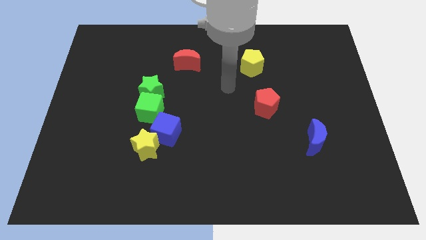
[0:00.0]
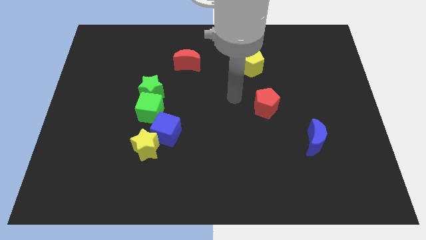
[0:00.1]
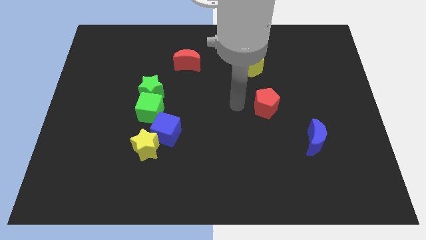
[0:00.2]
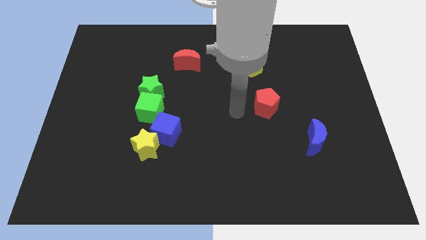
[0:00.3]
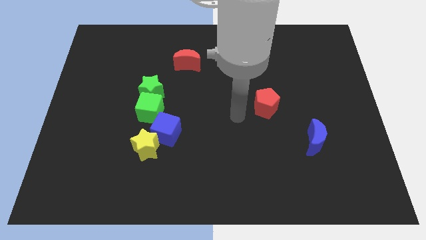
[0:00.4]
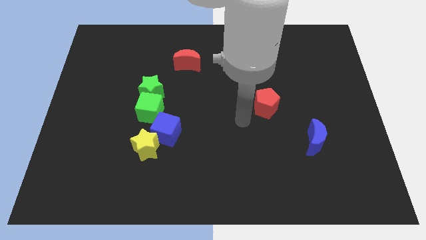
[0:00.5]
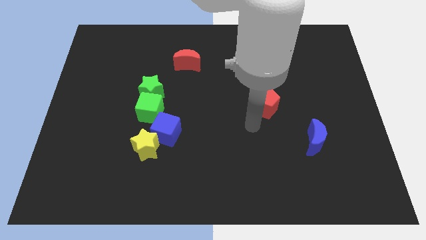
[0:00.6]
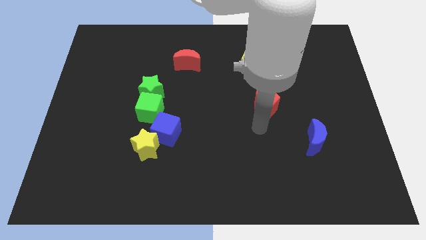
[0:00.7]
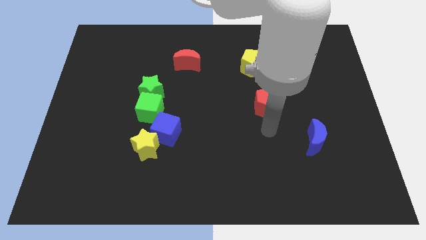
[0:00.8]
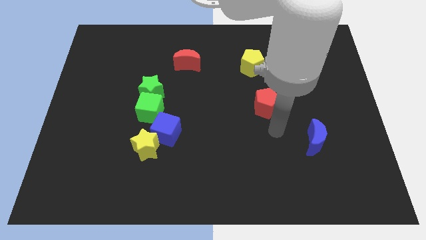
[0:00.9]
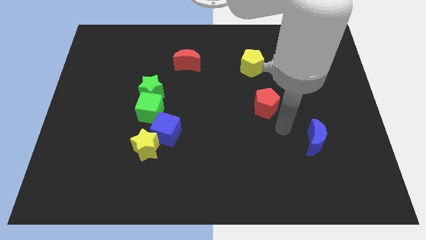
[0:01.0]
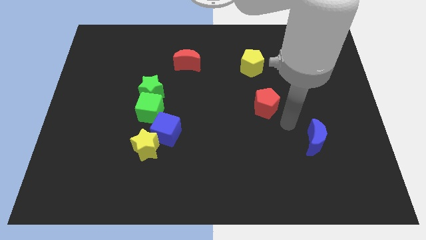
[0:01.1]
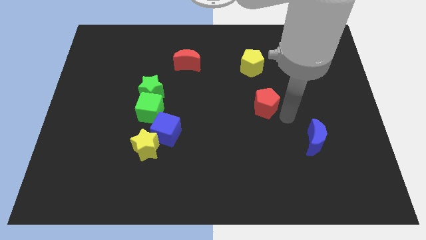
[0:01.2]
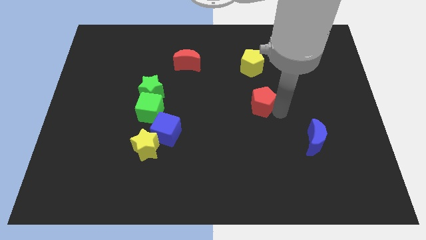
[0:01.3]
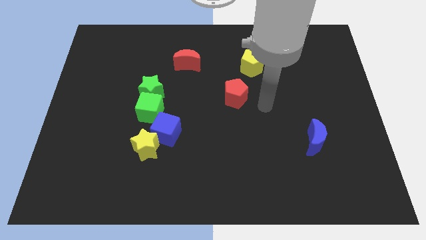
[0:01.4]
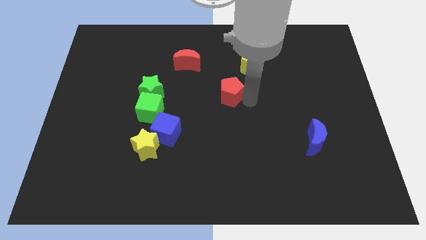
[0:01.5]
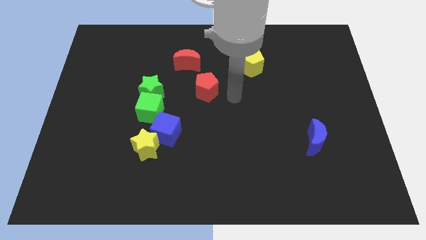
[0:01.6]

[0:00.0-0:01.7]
put the red pentagon right to the green star

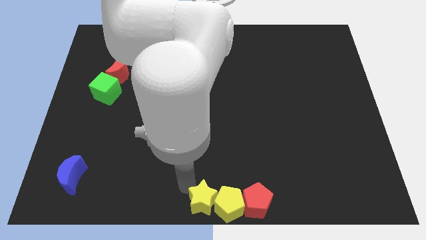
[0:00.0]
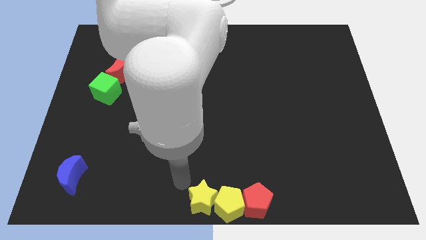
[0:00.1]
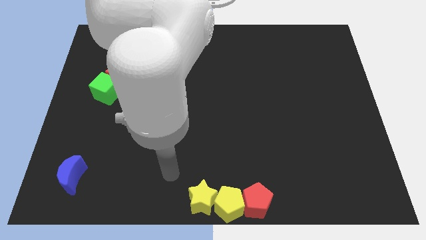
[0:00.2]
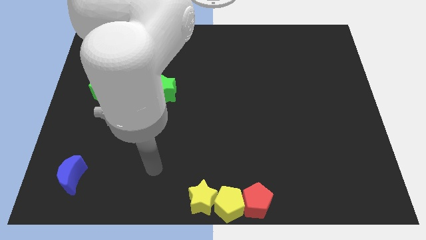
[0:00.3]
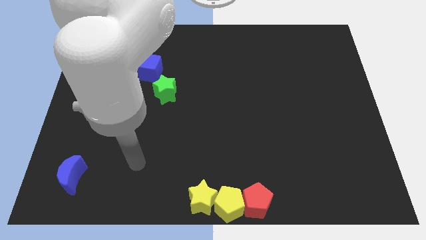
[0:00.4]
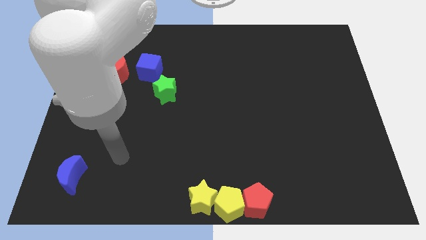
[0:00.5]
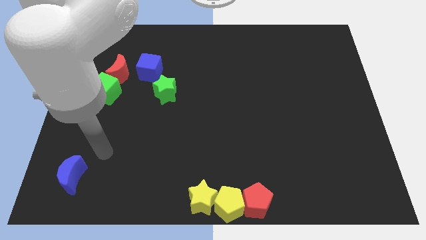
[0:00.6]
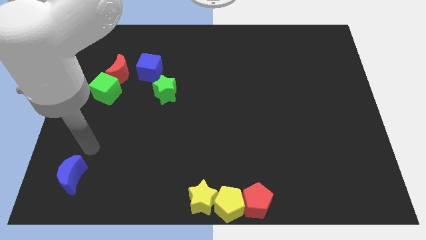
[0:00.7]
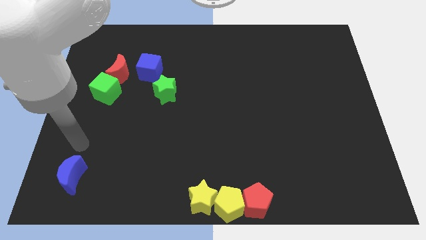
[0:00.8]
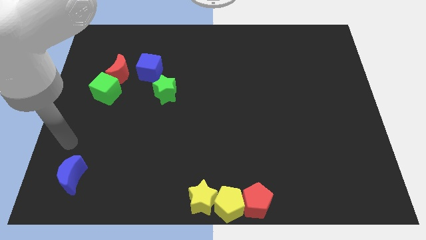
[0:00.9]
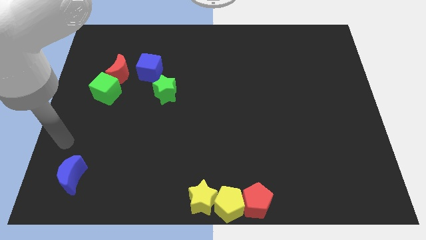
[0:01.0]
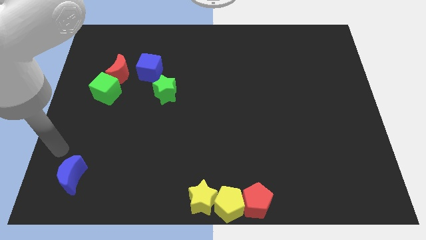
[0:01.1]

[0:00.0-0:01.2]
move your arm towards the blue crescent

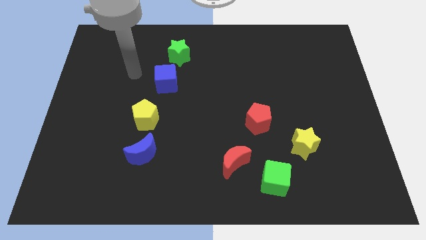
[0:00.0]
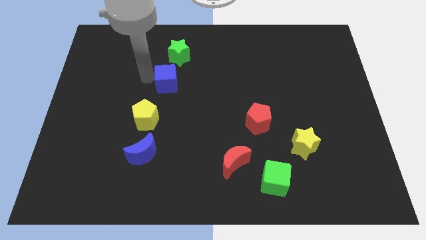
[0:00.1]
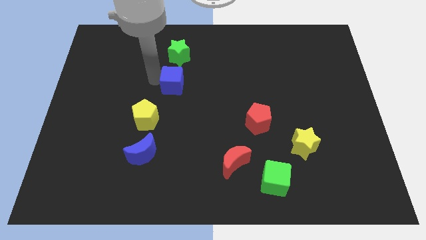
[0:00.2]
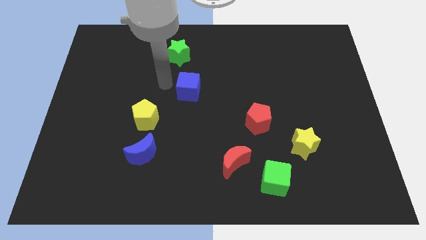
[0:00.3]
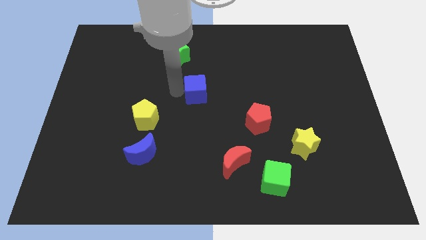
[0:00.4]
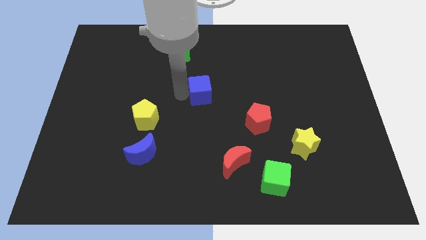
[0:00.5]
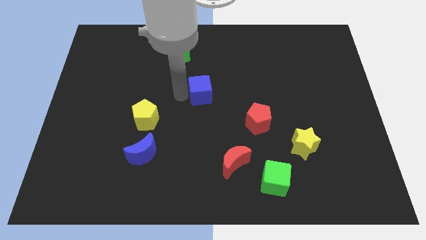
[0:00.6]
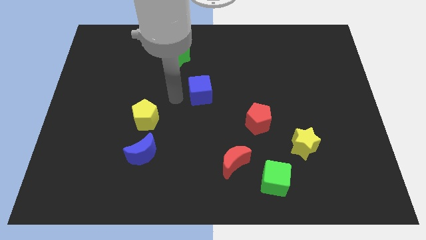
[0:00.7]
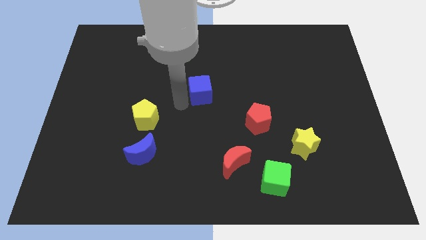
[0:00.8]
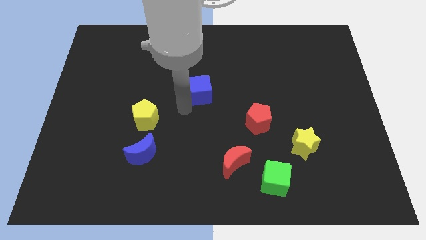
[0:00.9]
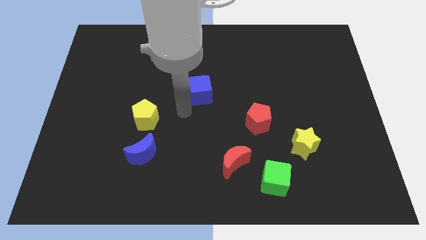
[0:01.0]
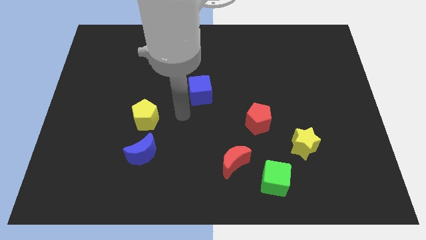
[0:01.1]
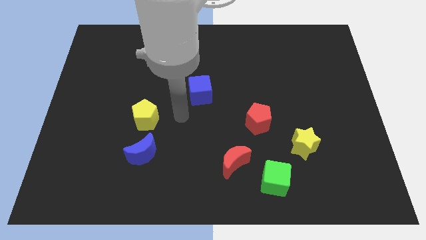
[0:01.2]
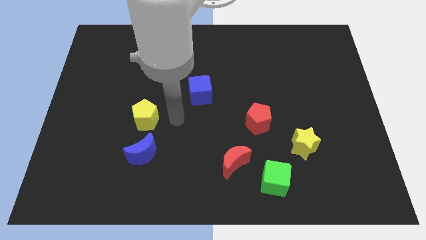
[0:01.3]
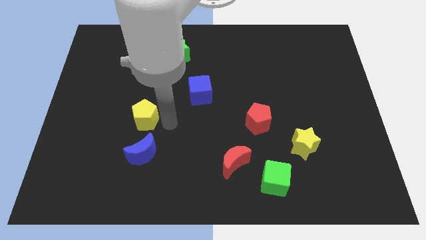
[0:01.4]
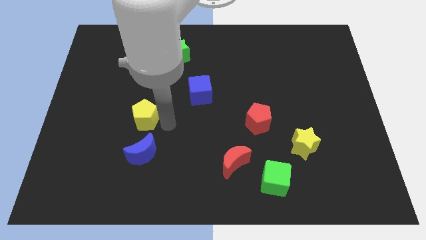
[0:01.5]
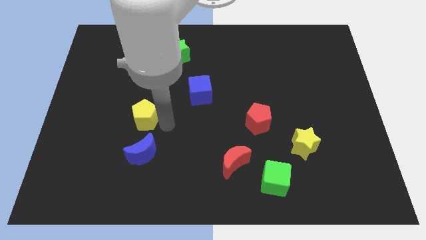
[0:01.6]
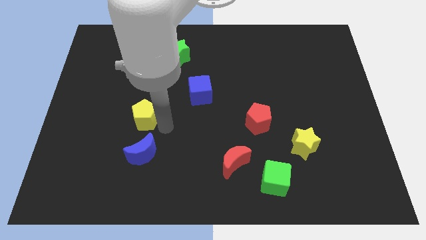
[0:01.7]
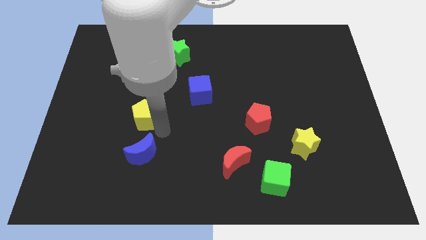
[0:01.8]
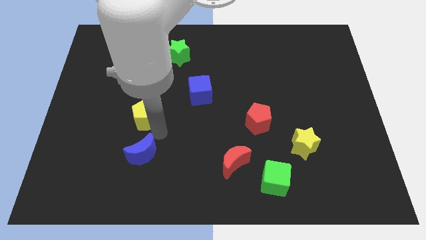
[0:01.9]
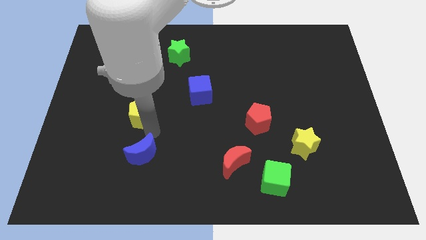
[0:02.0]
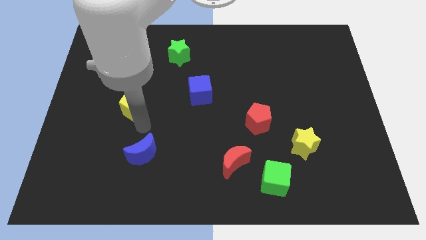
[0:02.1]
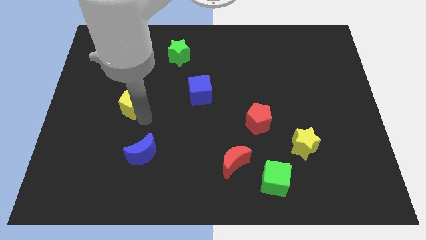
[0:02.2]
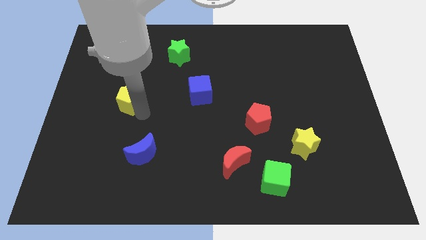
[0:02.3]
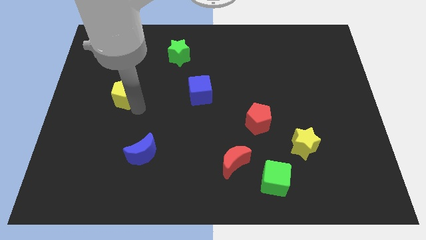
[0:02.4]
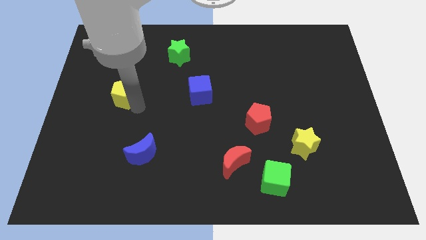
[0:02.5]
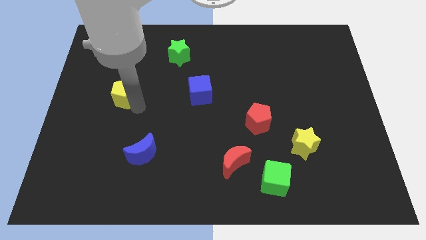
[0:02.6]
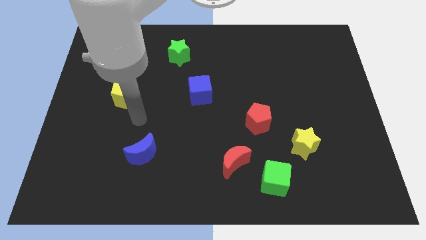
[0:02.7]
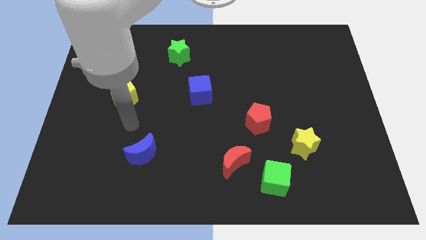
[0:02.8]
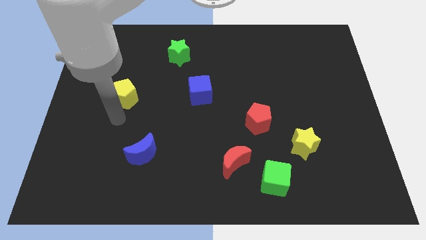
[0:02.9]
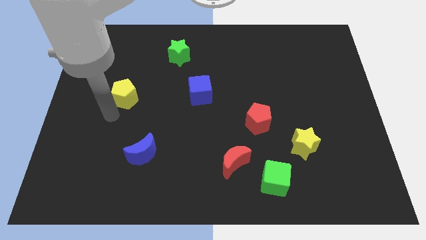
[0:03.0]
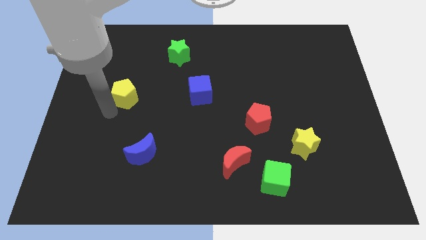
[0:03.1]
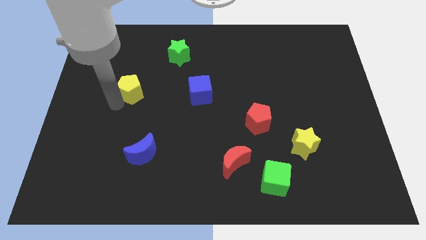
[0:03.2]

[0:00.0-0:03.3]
adjust the blue and yellow pentagon in such a way that to form a triangle with green star

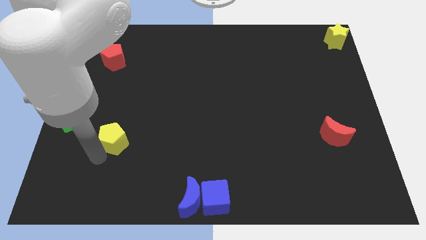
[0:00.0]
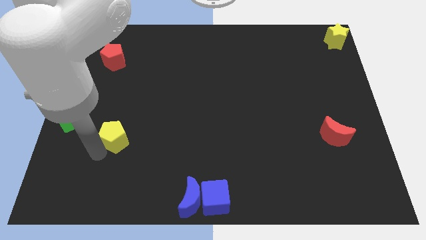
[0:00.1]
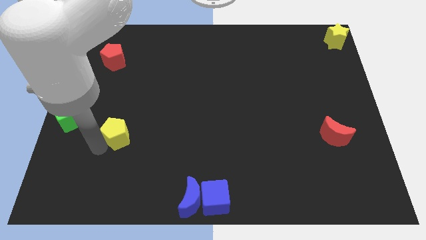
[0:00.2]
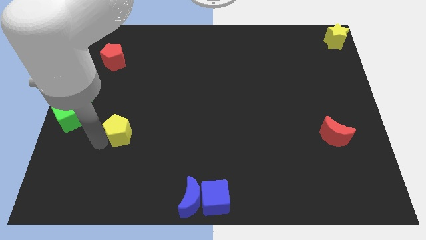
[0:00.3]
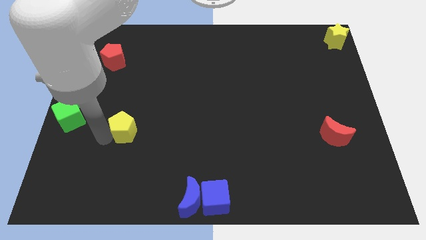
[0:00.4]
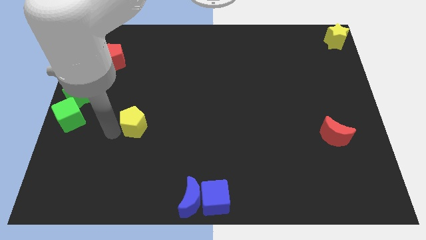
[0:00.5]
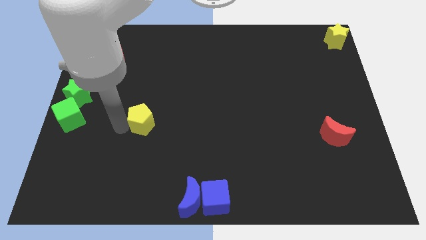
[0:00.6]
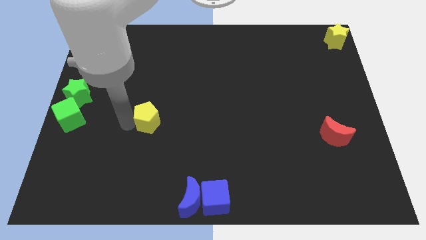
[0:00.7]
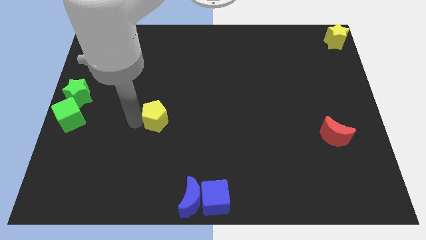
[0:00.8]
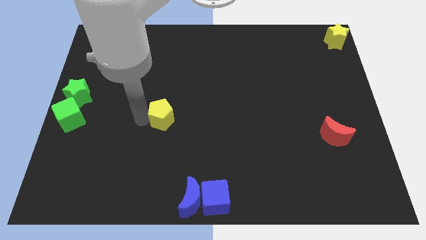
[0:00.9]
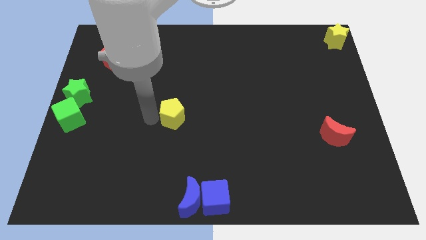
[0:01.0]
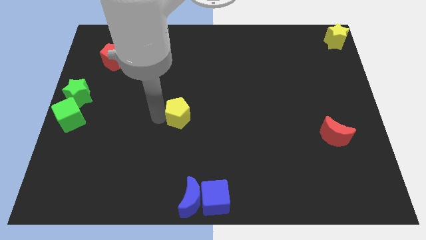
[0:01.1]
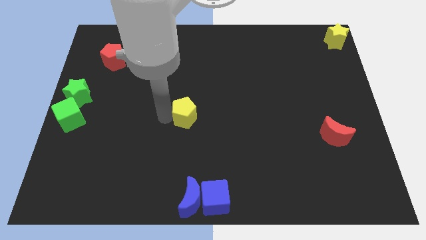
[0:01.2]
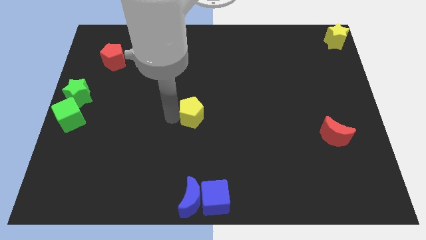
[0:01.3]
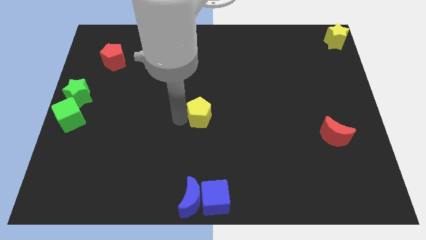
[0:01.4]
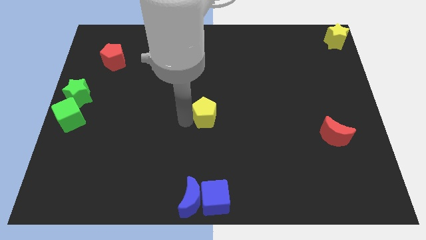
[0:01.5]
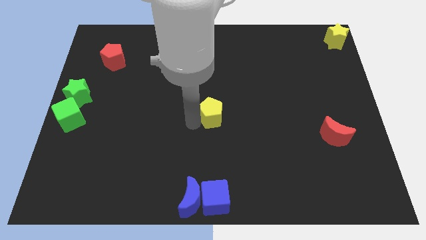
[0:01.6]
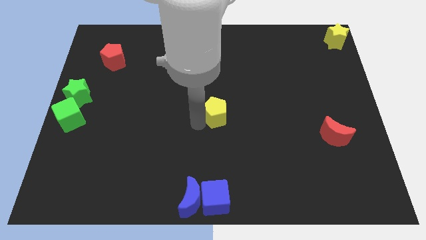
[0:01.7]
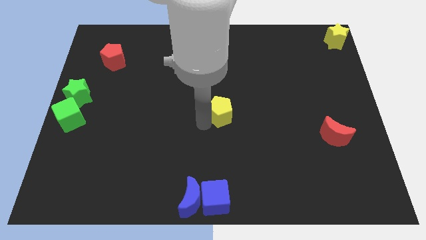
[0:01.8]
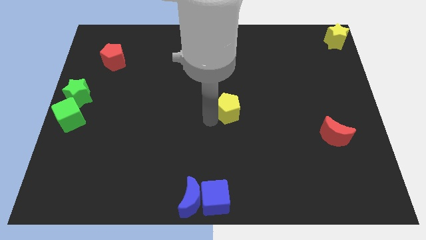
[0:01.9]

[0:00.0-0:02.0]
move the yellow pentagon to the center of the board

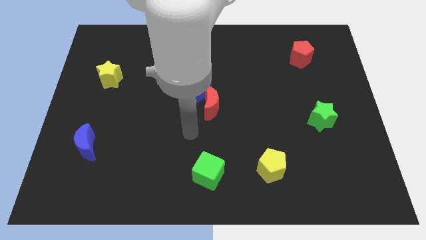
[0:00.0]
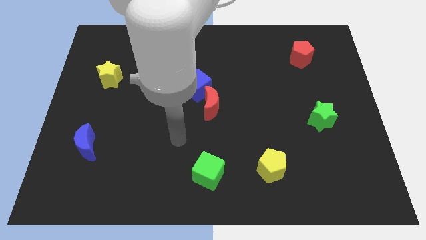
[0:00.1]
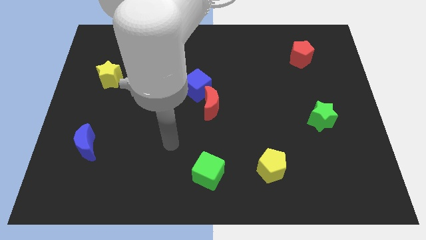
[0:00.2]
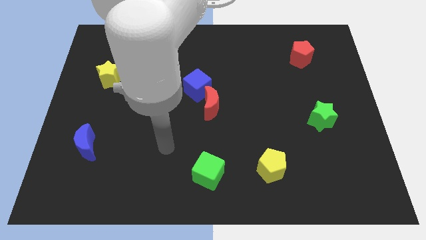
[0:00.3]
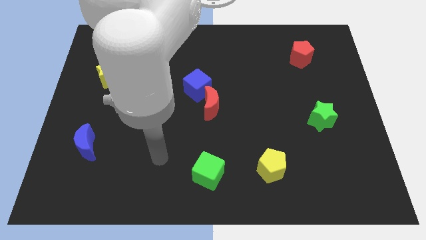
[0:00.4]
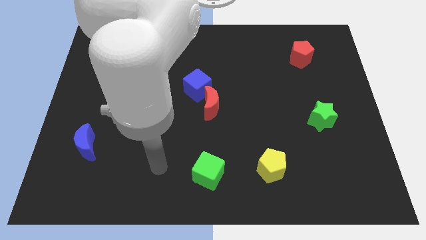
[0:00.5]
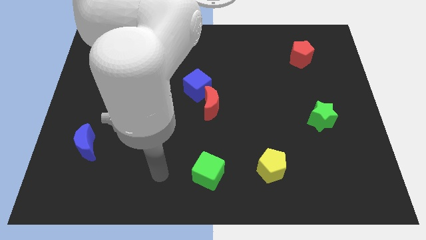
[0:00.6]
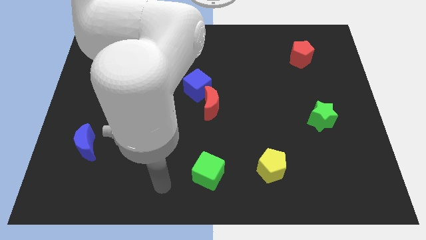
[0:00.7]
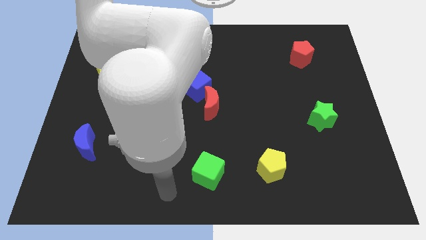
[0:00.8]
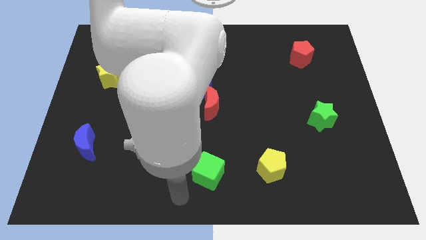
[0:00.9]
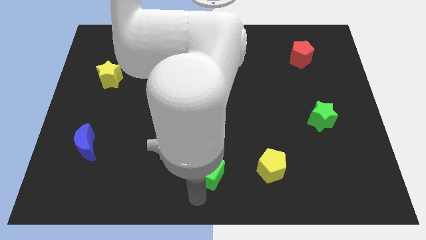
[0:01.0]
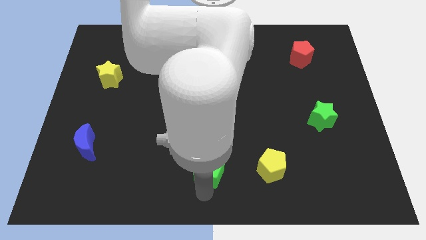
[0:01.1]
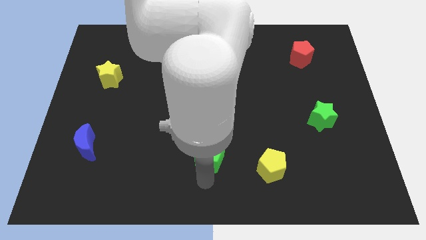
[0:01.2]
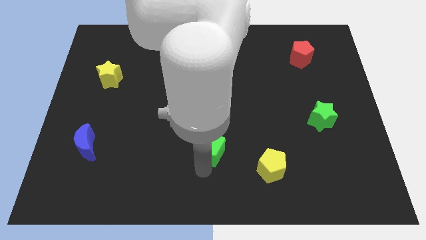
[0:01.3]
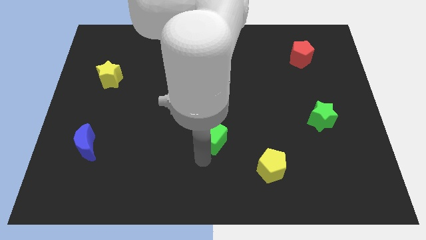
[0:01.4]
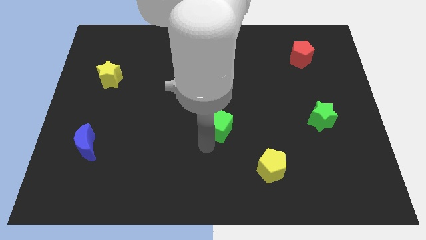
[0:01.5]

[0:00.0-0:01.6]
push the green cube slightly up
